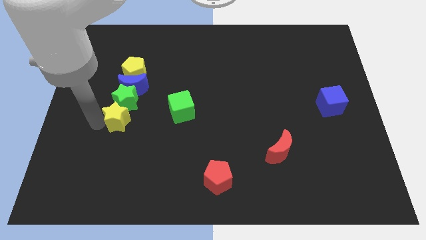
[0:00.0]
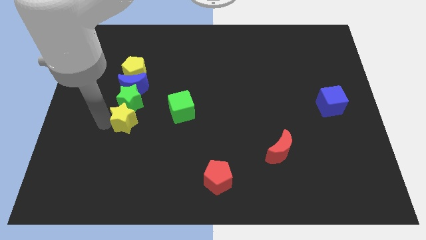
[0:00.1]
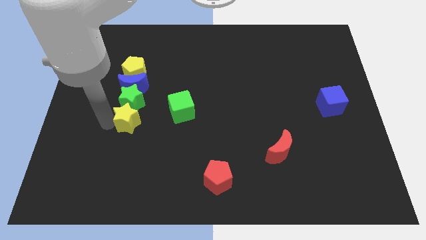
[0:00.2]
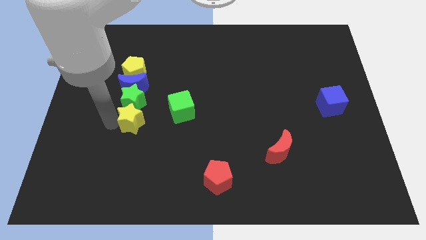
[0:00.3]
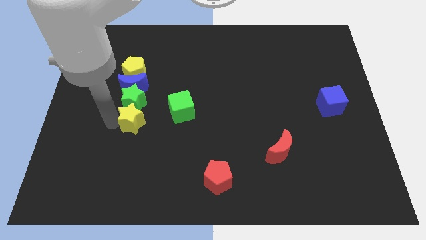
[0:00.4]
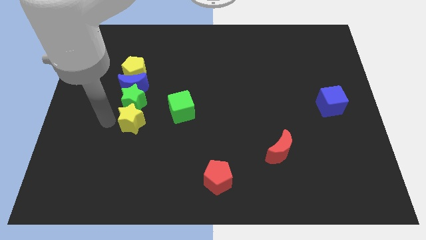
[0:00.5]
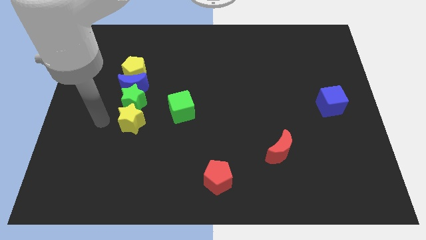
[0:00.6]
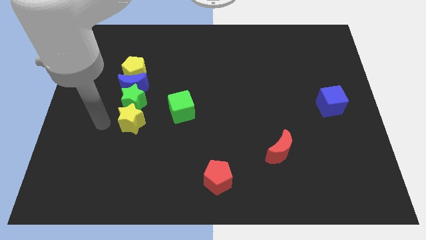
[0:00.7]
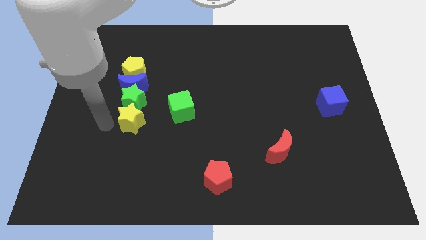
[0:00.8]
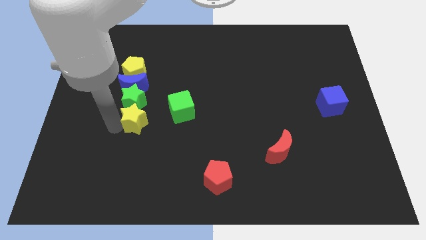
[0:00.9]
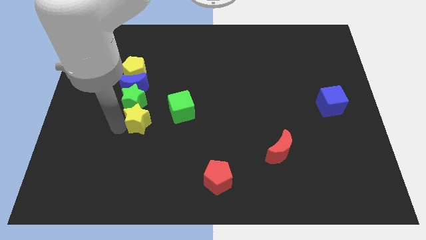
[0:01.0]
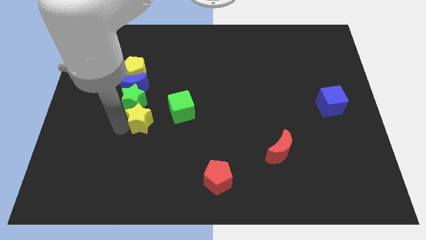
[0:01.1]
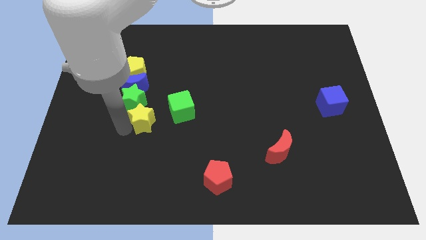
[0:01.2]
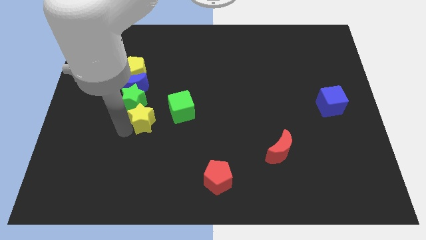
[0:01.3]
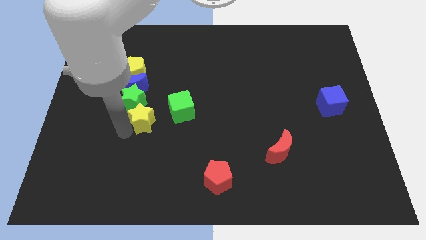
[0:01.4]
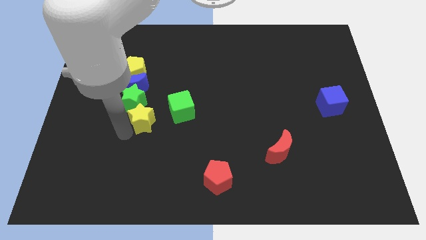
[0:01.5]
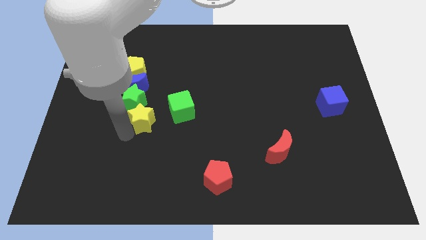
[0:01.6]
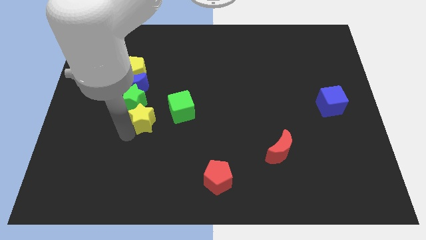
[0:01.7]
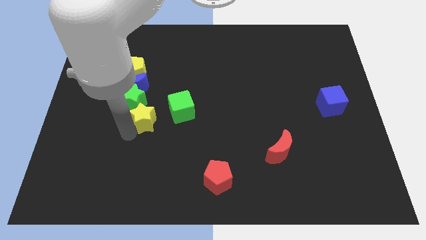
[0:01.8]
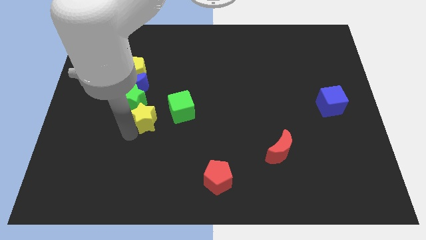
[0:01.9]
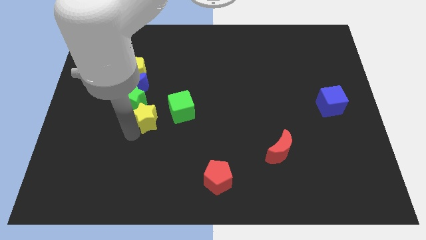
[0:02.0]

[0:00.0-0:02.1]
push the yellow star slightly towards the green cube

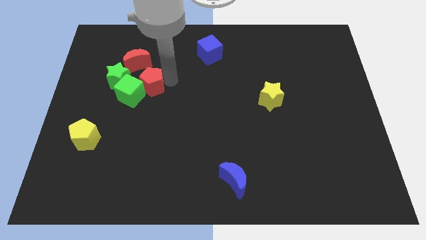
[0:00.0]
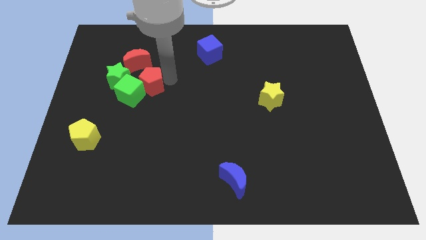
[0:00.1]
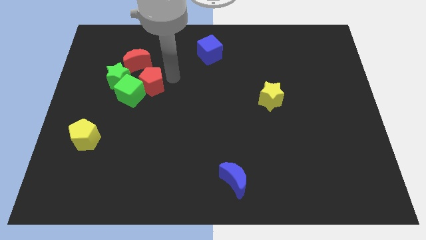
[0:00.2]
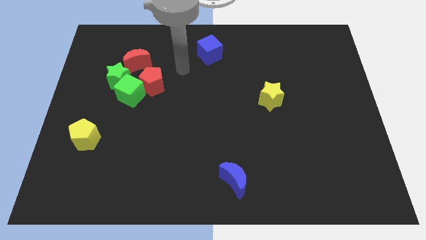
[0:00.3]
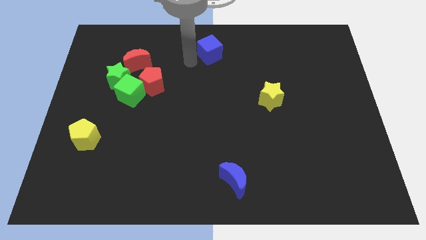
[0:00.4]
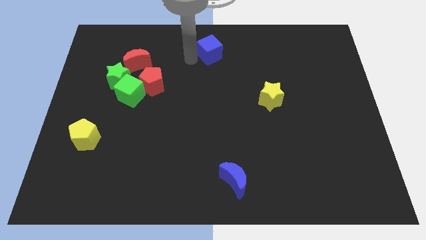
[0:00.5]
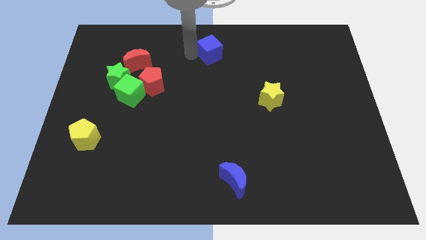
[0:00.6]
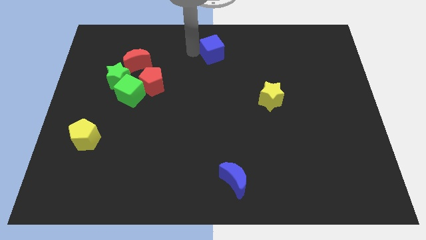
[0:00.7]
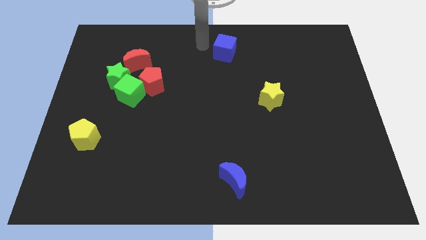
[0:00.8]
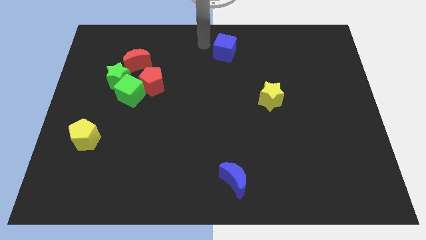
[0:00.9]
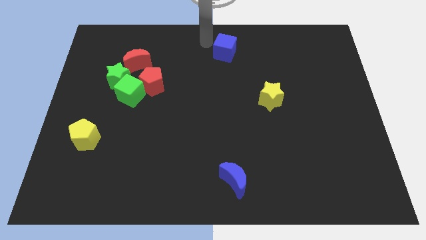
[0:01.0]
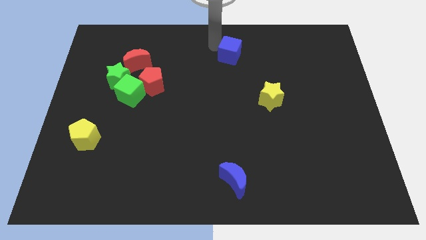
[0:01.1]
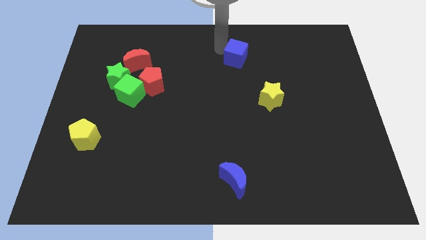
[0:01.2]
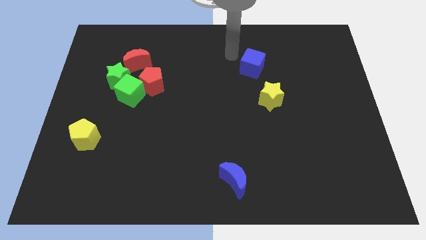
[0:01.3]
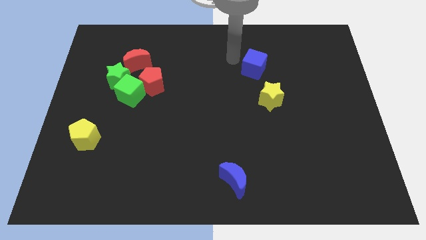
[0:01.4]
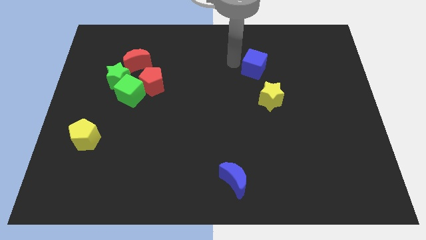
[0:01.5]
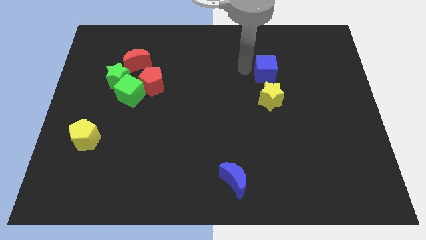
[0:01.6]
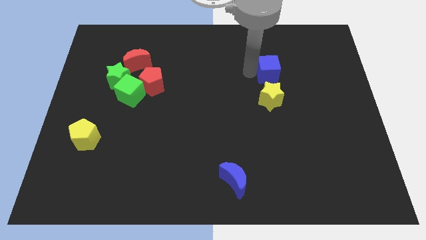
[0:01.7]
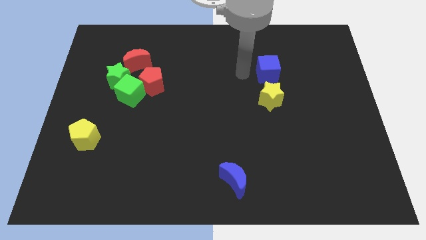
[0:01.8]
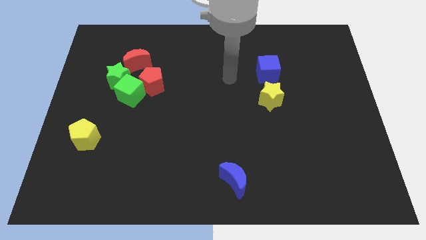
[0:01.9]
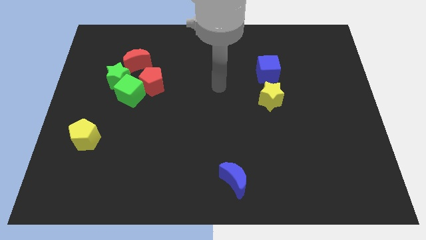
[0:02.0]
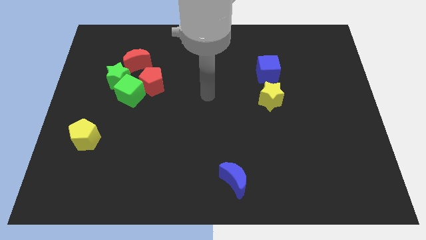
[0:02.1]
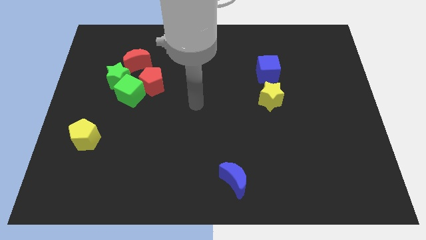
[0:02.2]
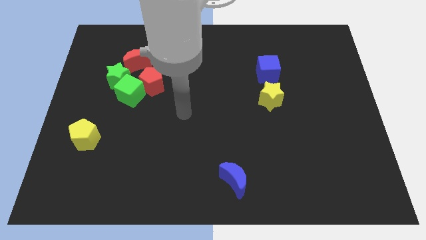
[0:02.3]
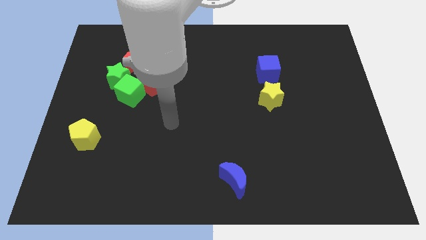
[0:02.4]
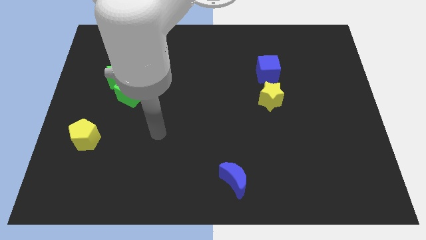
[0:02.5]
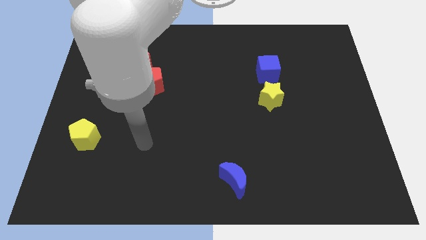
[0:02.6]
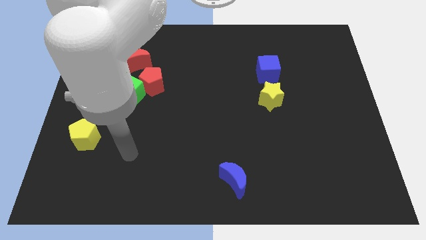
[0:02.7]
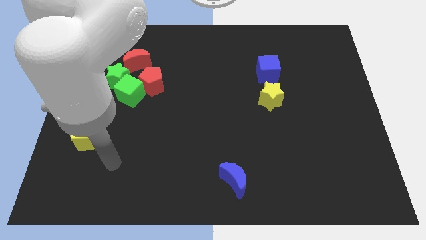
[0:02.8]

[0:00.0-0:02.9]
slide the blue cube above the yellow star

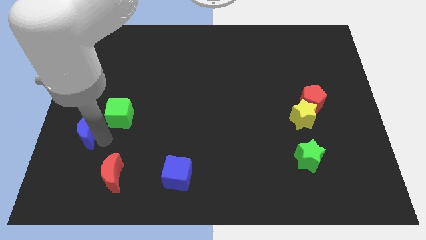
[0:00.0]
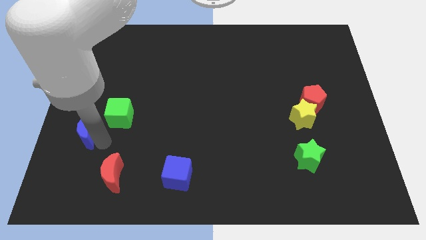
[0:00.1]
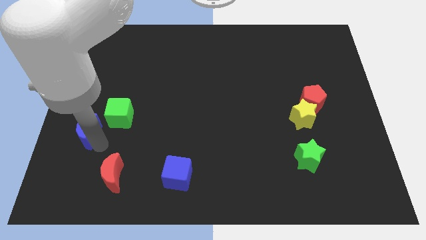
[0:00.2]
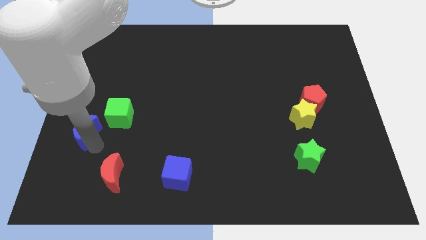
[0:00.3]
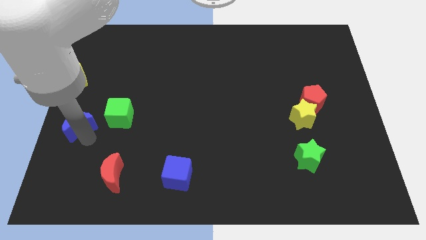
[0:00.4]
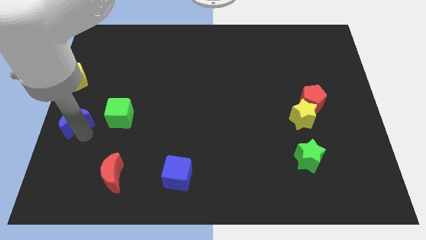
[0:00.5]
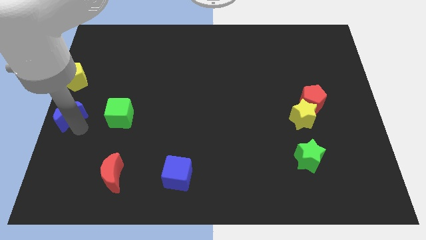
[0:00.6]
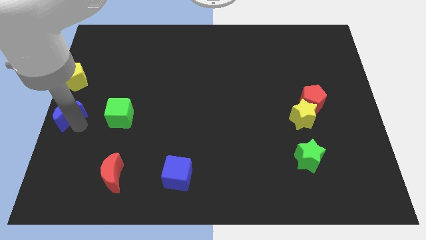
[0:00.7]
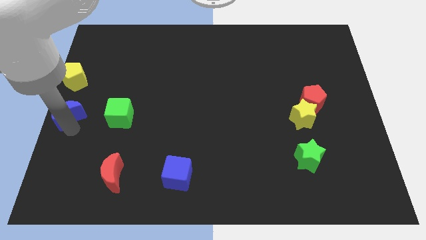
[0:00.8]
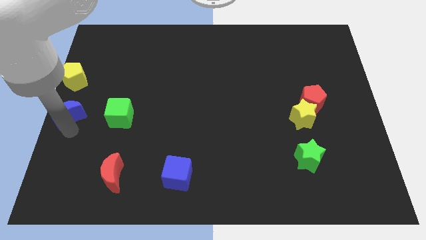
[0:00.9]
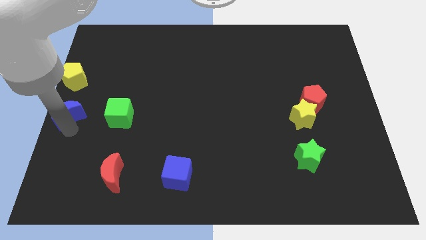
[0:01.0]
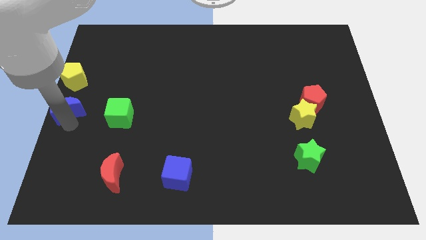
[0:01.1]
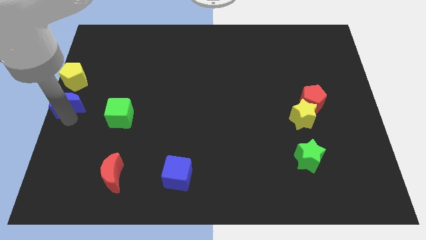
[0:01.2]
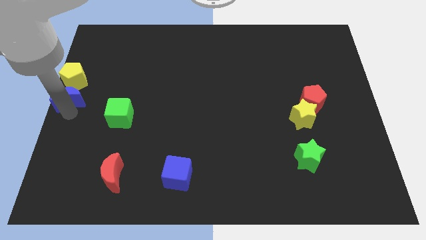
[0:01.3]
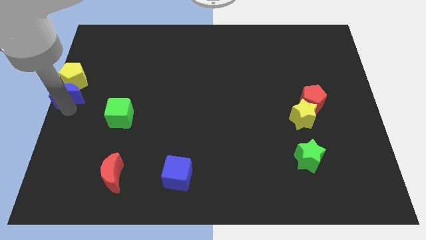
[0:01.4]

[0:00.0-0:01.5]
separate the blue crescent from the green cube

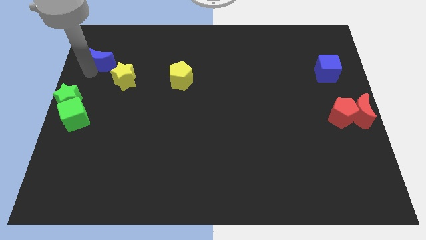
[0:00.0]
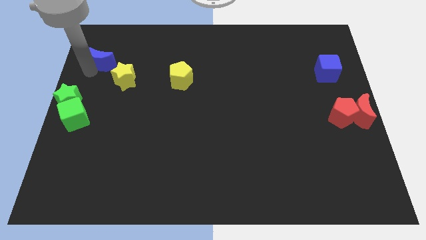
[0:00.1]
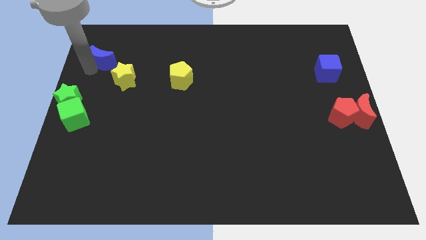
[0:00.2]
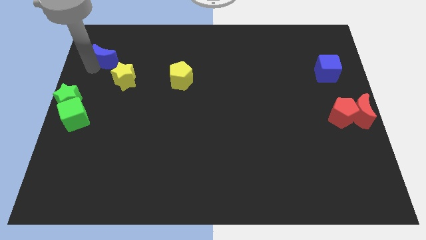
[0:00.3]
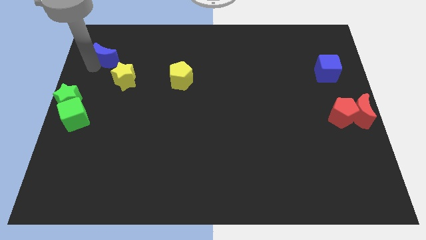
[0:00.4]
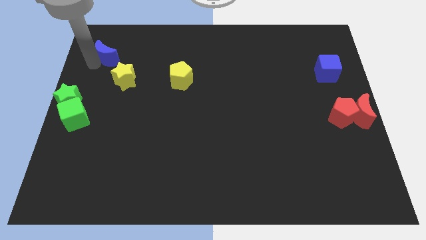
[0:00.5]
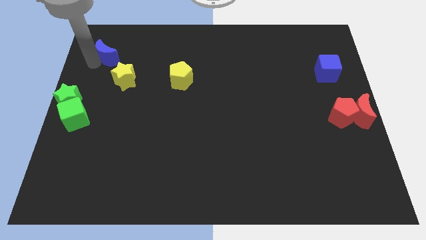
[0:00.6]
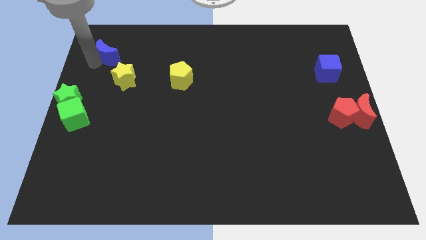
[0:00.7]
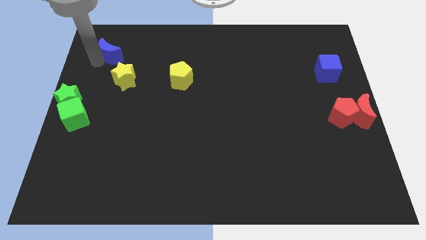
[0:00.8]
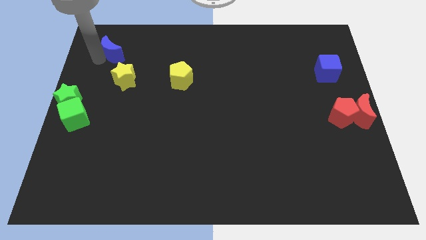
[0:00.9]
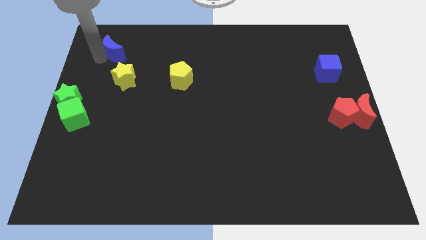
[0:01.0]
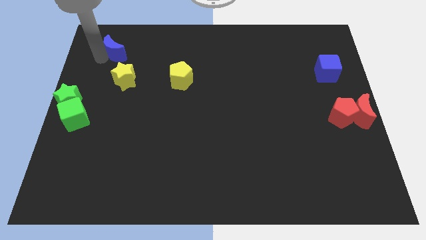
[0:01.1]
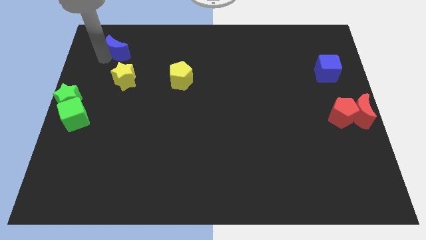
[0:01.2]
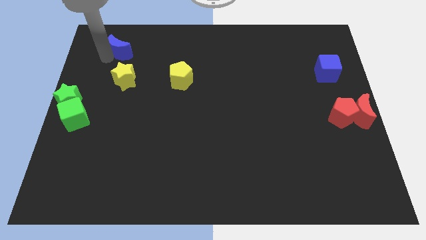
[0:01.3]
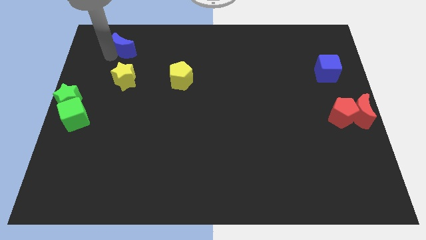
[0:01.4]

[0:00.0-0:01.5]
place the blue crescent above the yellow star

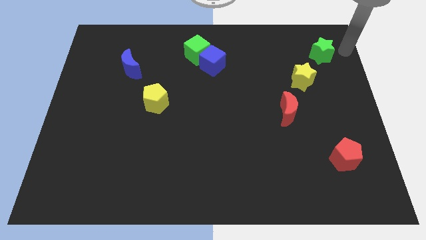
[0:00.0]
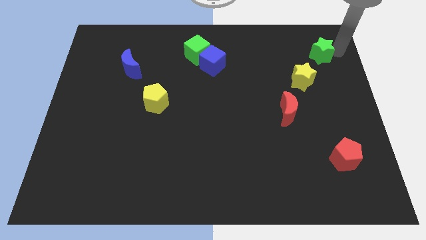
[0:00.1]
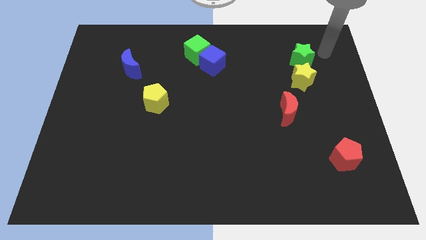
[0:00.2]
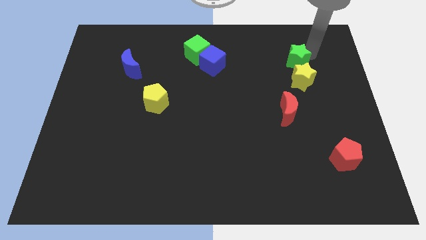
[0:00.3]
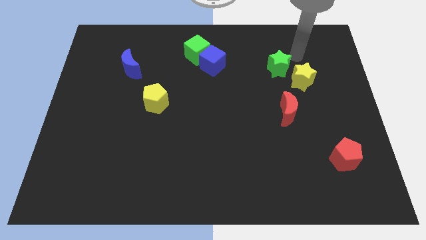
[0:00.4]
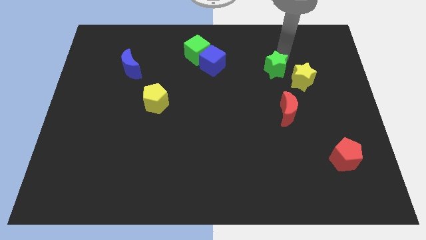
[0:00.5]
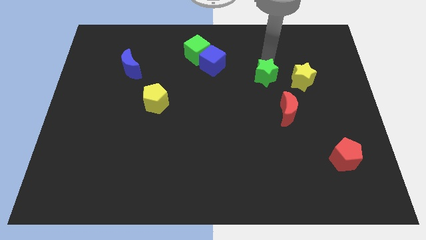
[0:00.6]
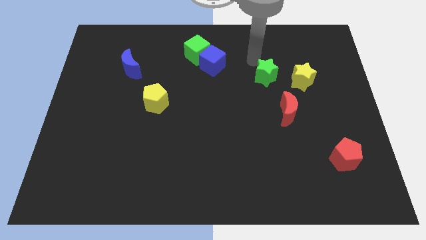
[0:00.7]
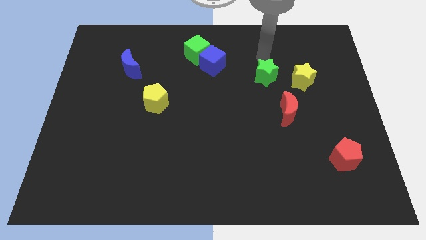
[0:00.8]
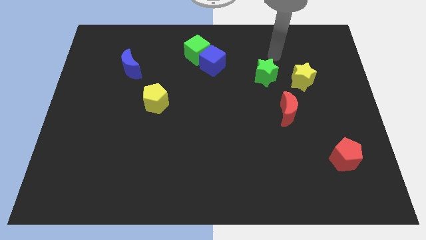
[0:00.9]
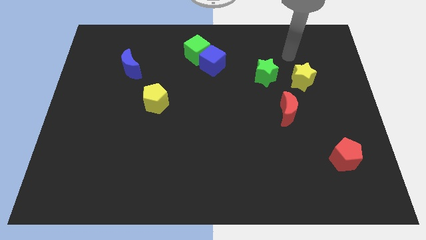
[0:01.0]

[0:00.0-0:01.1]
place the green star to the left of the yellow star
